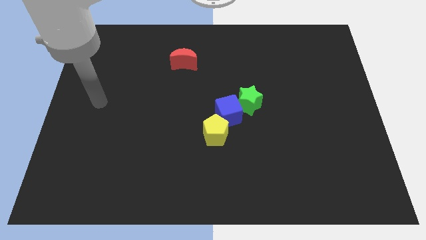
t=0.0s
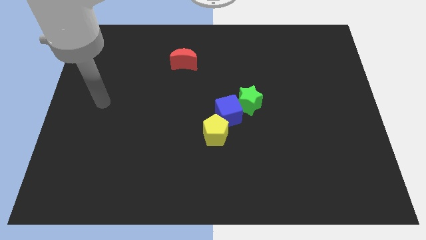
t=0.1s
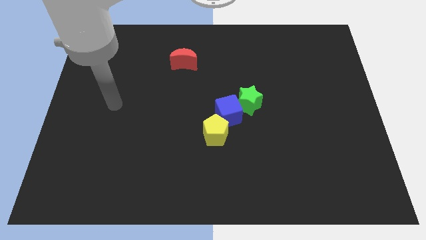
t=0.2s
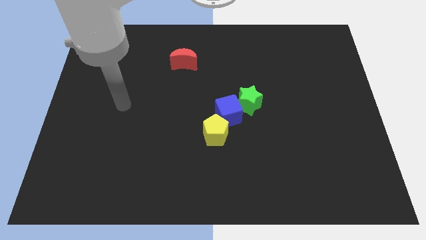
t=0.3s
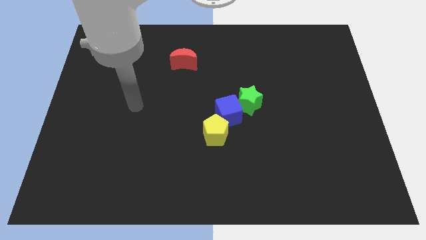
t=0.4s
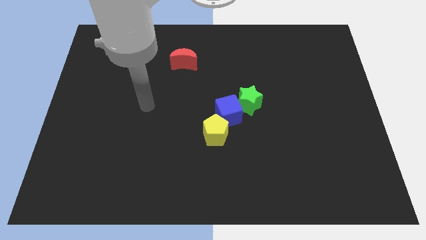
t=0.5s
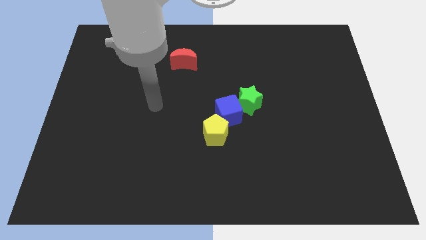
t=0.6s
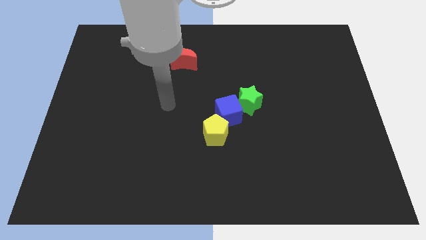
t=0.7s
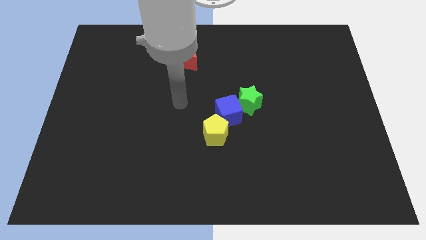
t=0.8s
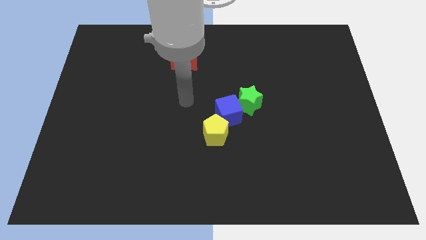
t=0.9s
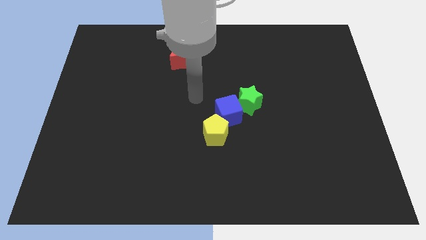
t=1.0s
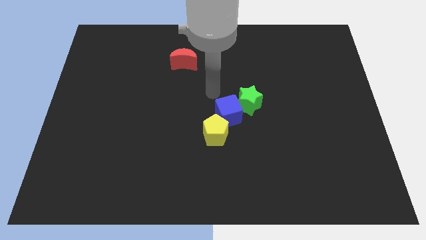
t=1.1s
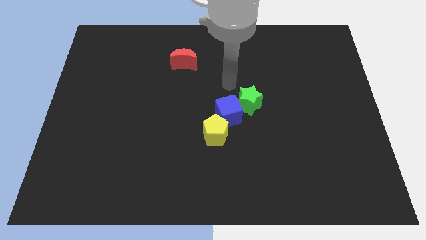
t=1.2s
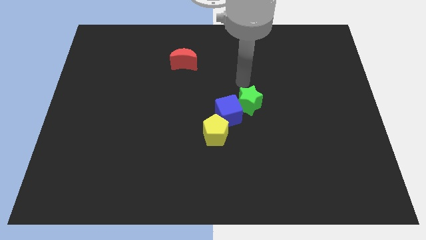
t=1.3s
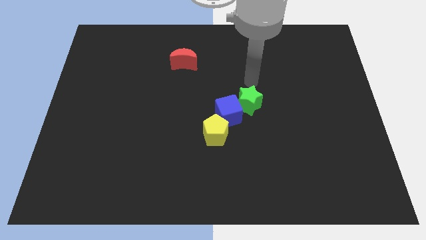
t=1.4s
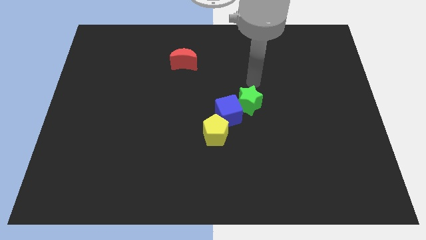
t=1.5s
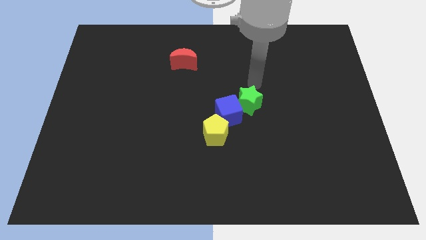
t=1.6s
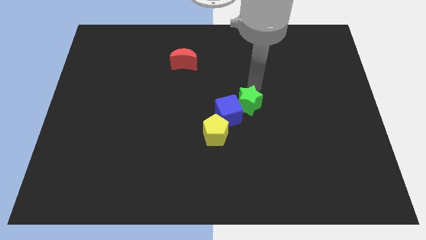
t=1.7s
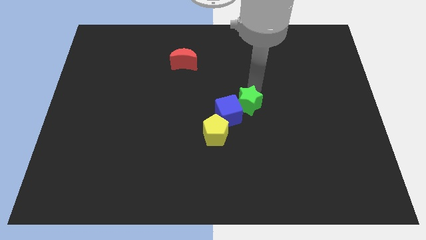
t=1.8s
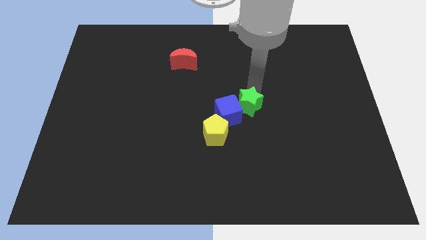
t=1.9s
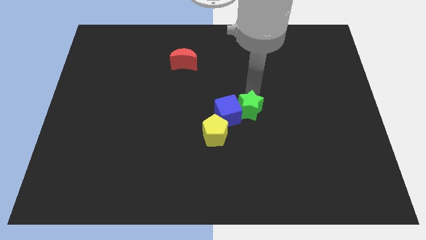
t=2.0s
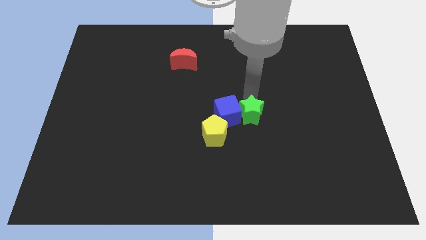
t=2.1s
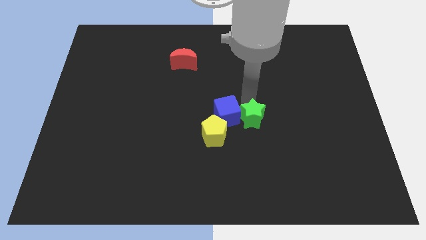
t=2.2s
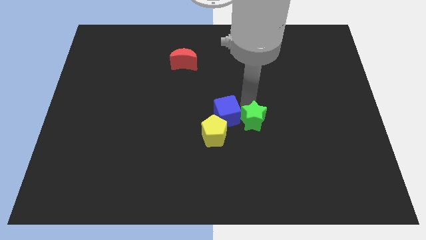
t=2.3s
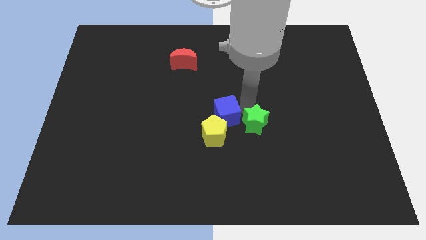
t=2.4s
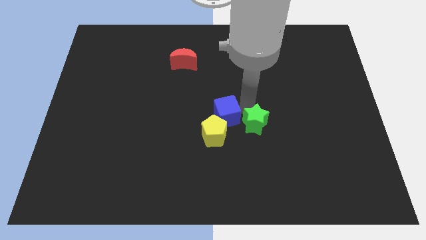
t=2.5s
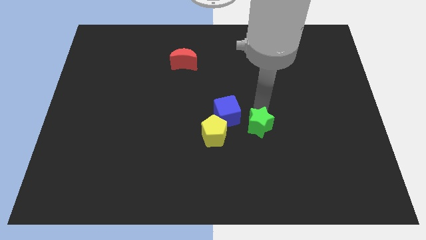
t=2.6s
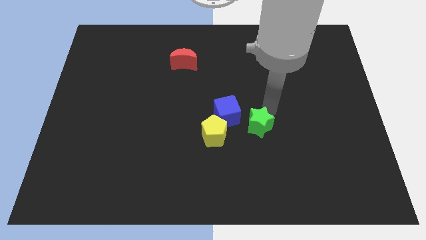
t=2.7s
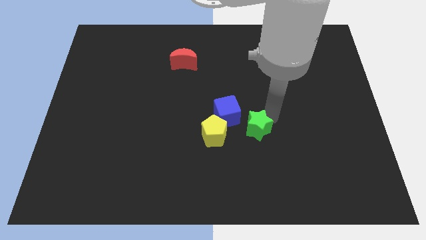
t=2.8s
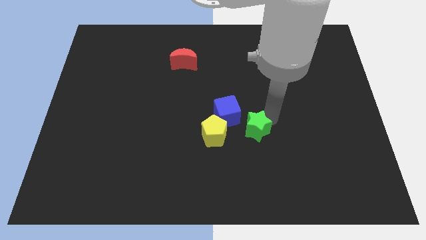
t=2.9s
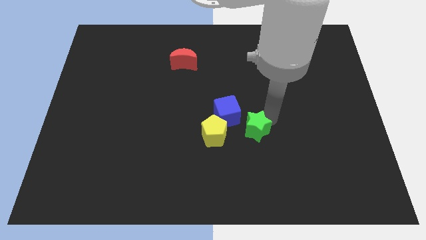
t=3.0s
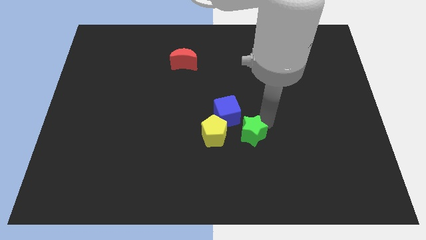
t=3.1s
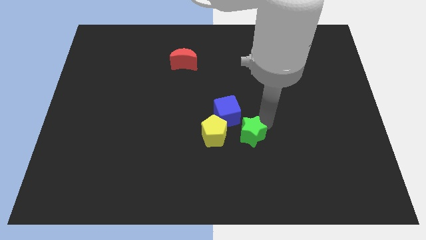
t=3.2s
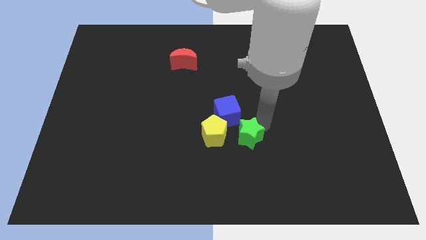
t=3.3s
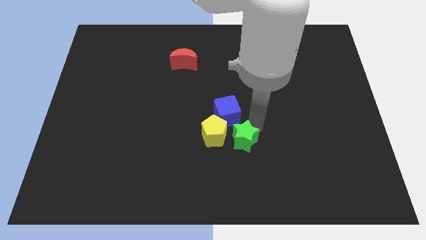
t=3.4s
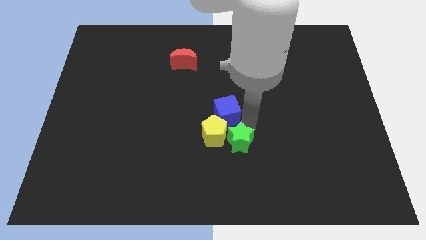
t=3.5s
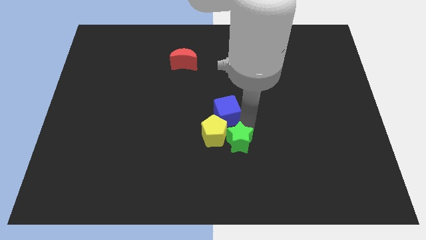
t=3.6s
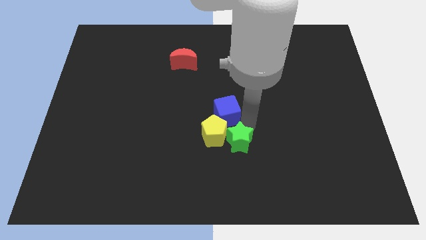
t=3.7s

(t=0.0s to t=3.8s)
put the star next to the yellow block

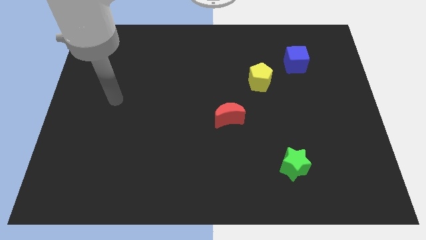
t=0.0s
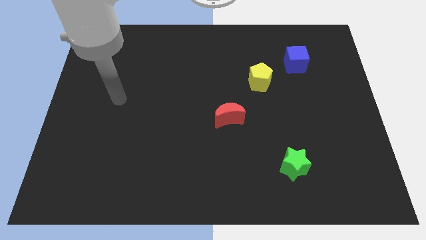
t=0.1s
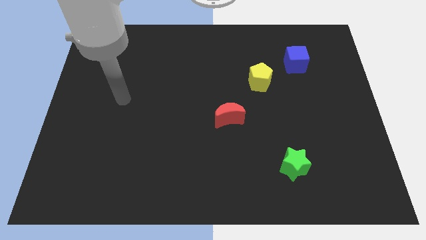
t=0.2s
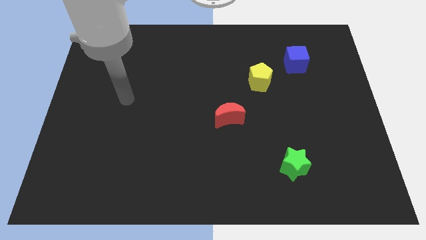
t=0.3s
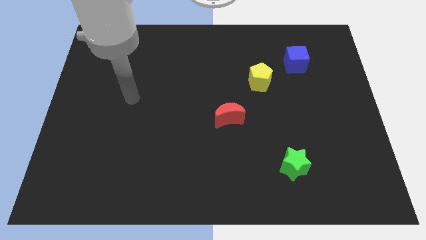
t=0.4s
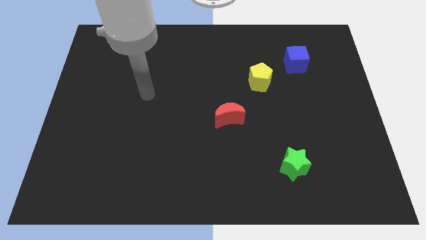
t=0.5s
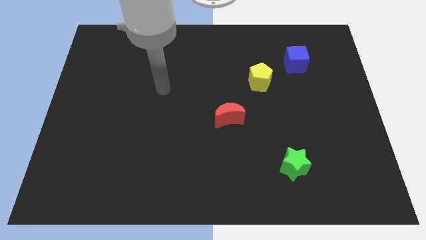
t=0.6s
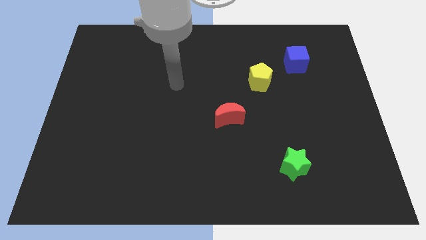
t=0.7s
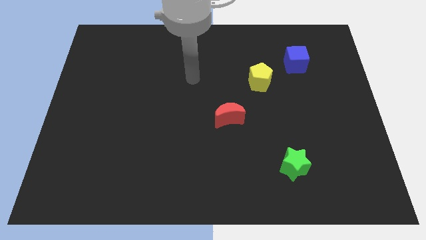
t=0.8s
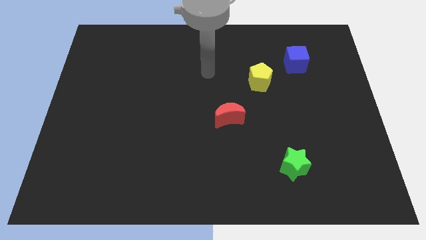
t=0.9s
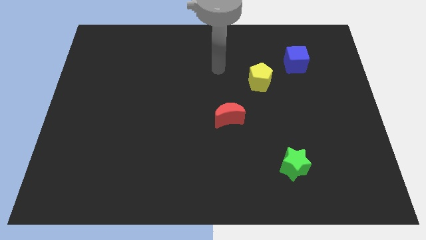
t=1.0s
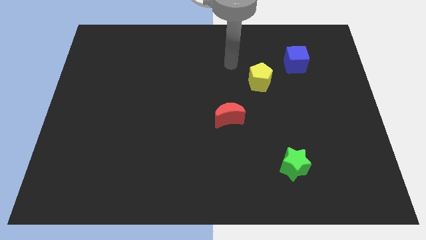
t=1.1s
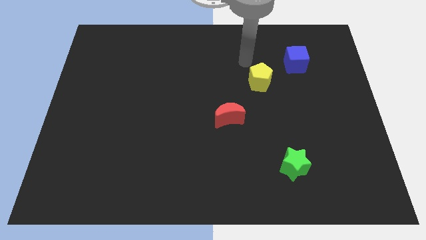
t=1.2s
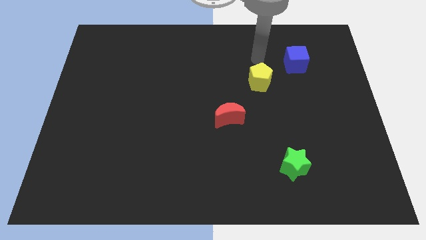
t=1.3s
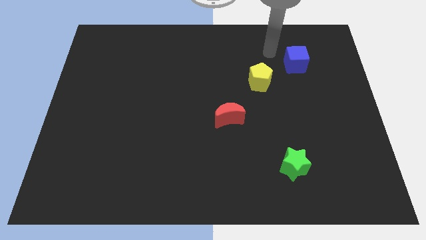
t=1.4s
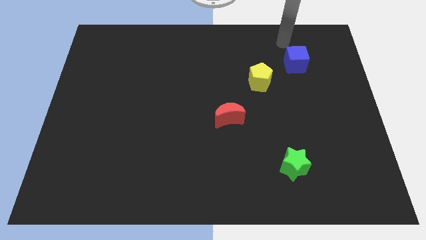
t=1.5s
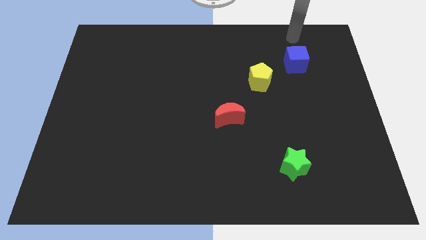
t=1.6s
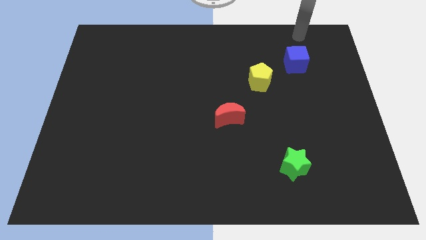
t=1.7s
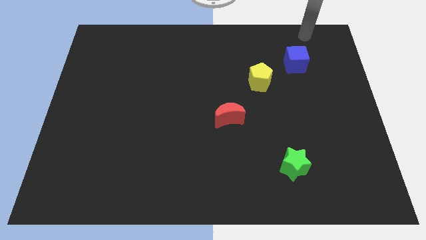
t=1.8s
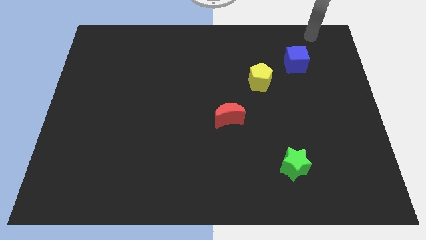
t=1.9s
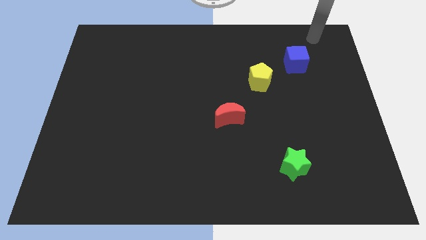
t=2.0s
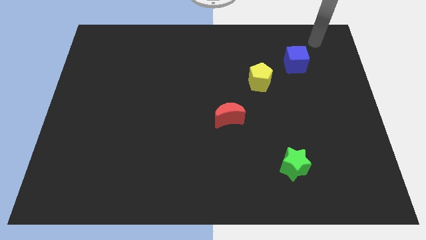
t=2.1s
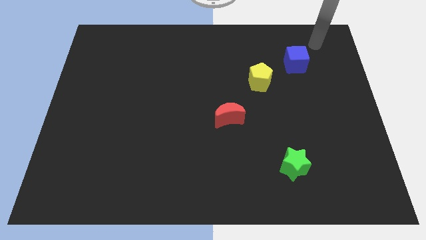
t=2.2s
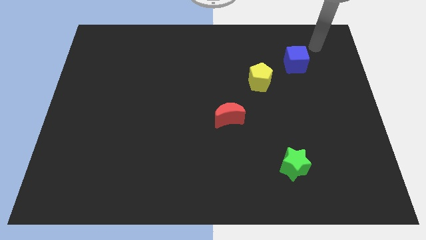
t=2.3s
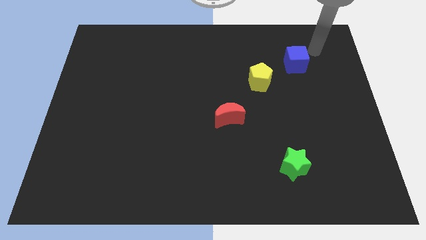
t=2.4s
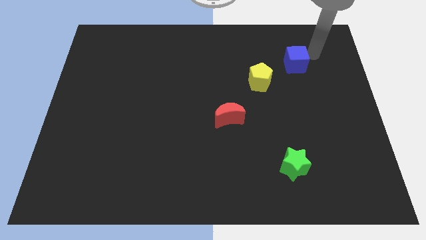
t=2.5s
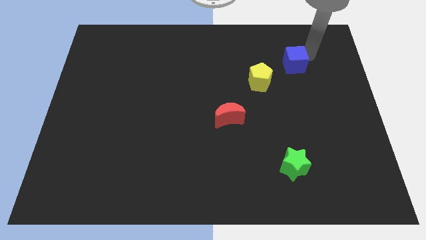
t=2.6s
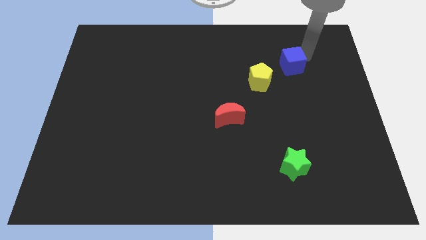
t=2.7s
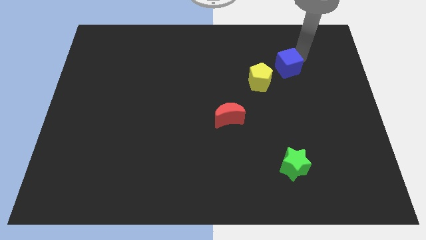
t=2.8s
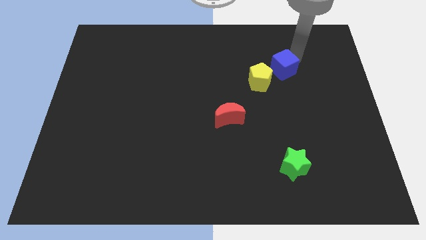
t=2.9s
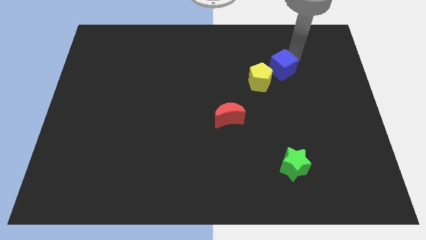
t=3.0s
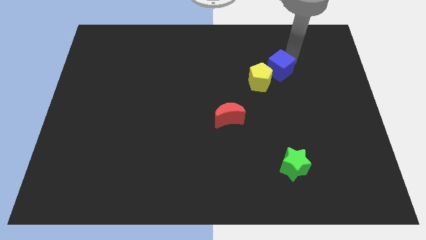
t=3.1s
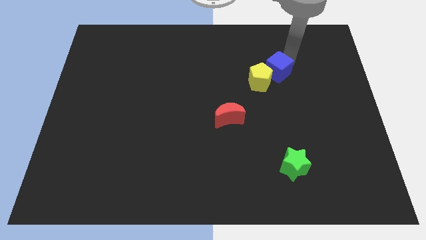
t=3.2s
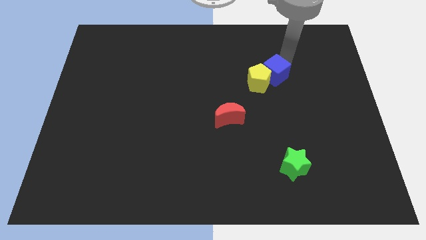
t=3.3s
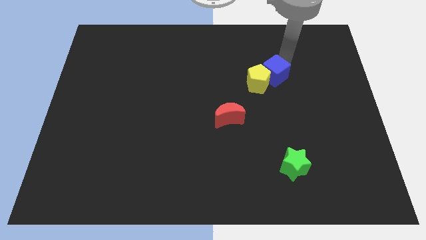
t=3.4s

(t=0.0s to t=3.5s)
put the blue cube towards the yellow block

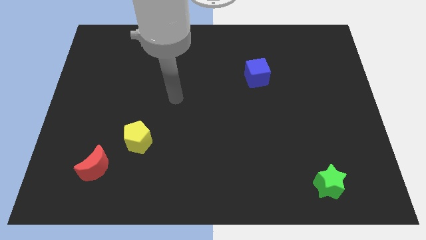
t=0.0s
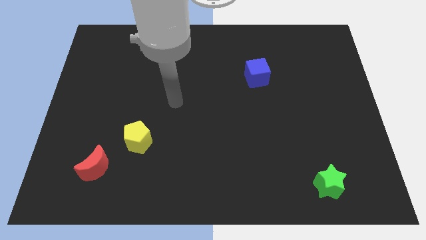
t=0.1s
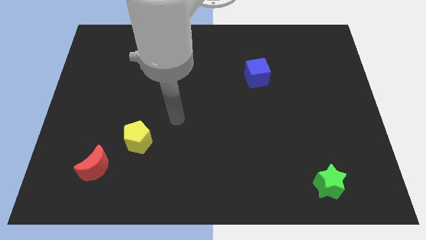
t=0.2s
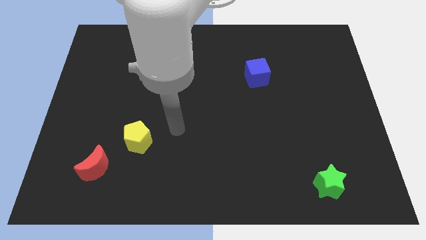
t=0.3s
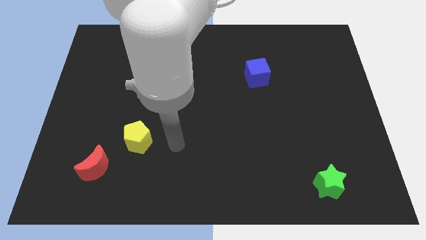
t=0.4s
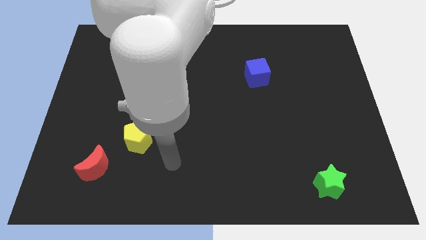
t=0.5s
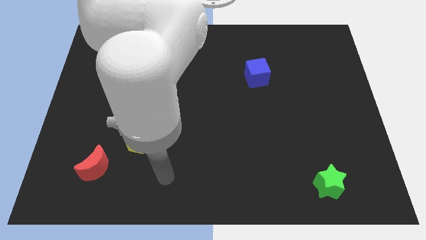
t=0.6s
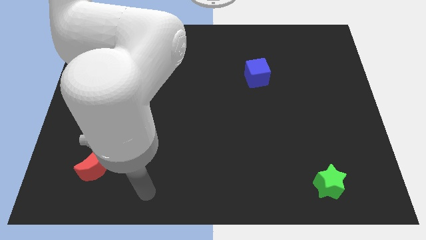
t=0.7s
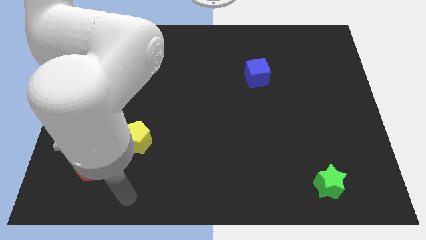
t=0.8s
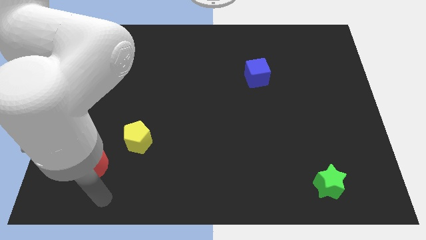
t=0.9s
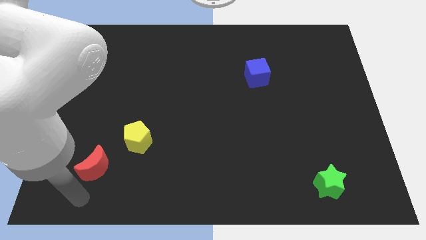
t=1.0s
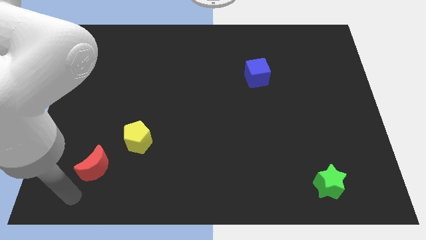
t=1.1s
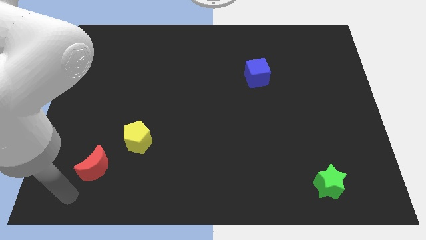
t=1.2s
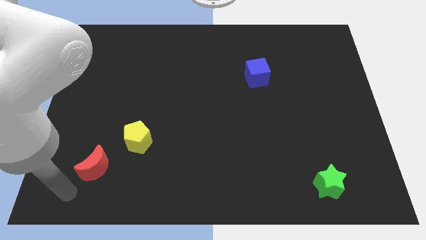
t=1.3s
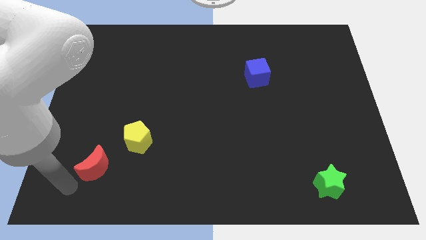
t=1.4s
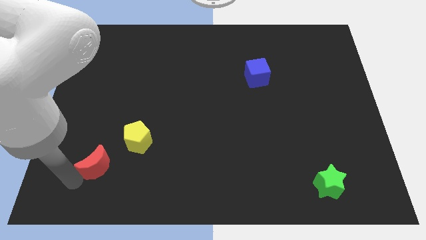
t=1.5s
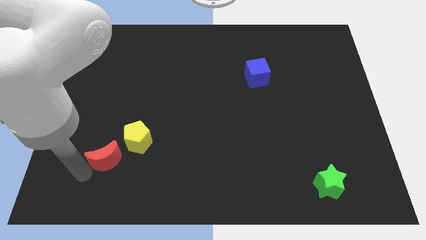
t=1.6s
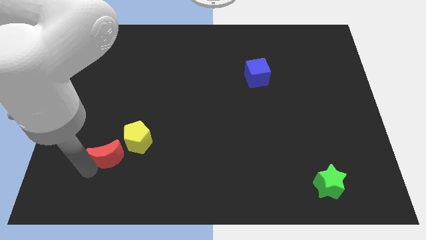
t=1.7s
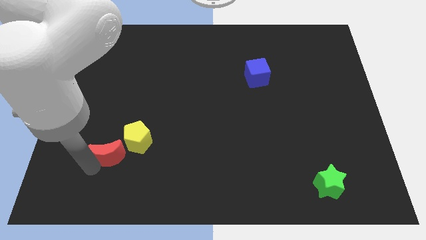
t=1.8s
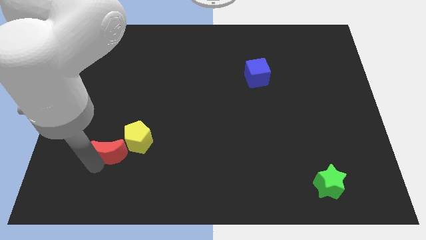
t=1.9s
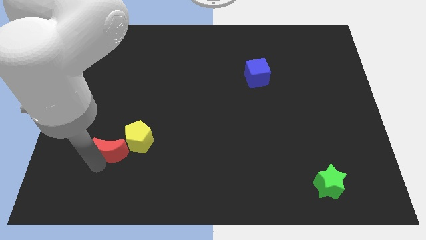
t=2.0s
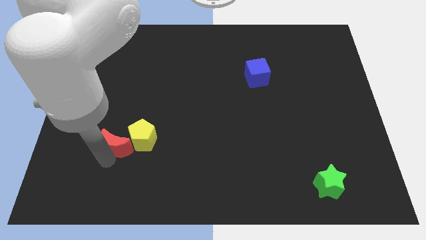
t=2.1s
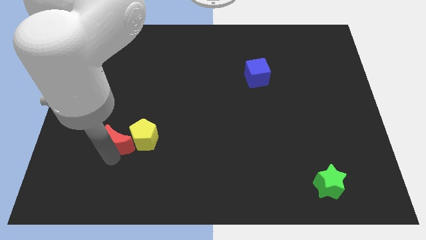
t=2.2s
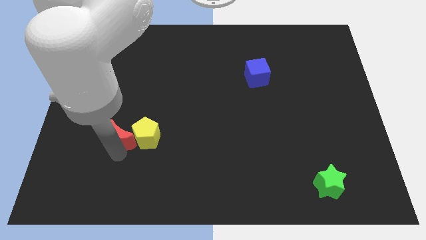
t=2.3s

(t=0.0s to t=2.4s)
move the red block close to the pentagon
